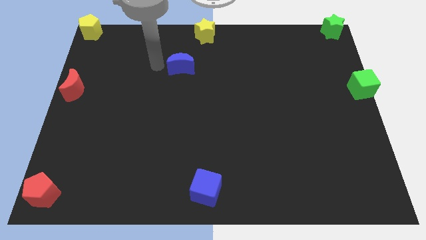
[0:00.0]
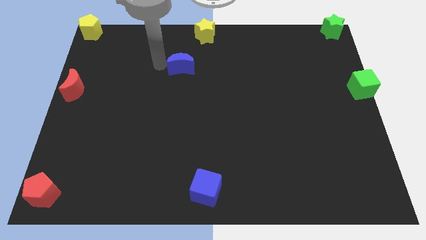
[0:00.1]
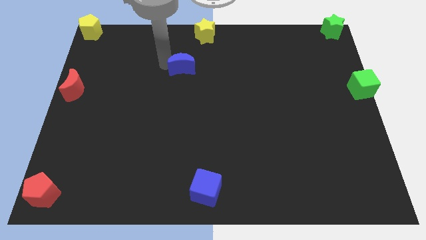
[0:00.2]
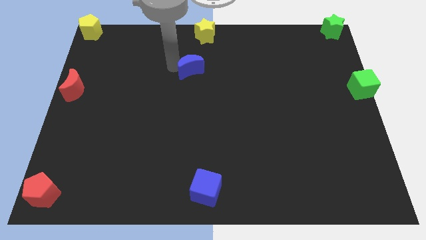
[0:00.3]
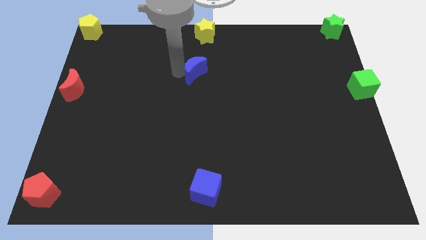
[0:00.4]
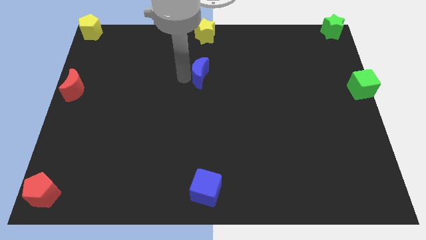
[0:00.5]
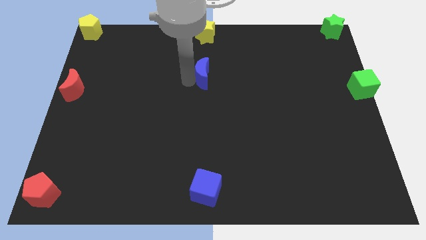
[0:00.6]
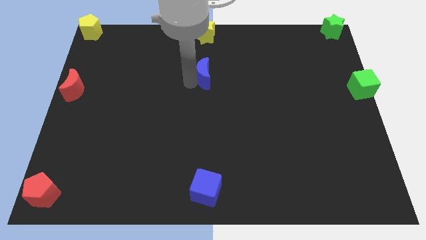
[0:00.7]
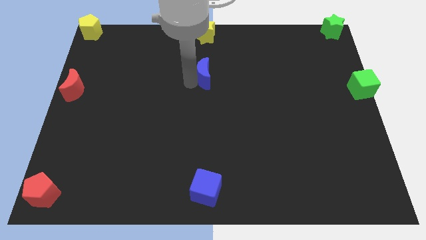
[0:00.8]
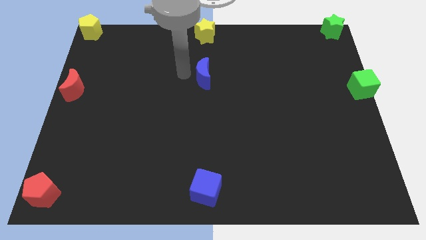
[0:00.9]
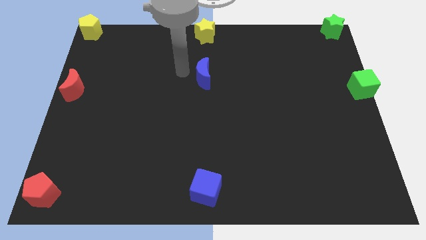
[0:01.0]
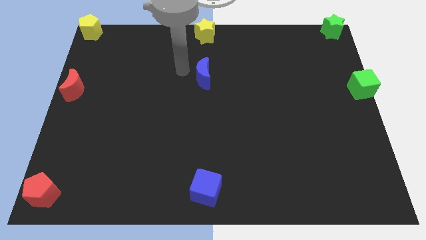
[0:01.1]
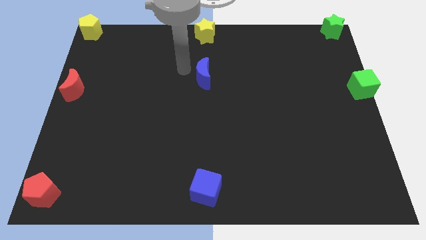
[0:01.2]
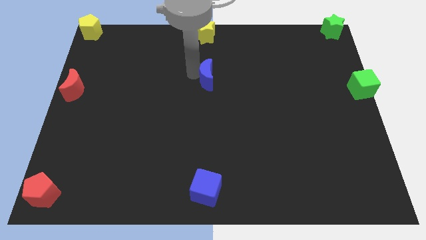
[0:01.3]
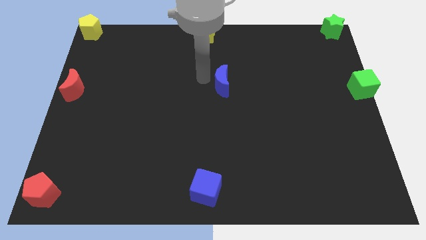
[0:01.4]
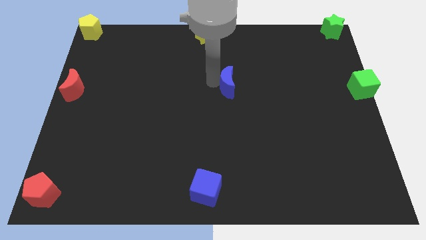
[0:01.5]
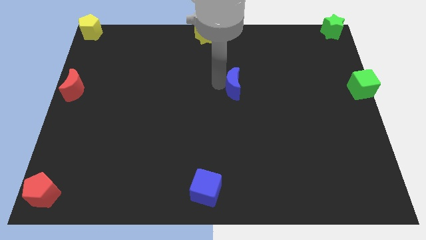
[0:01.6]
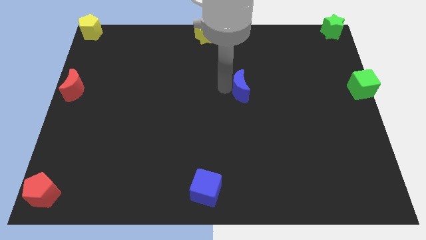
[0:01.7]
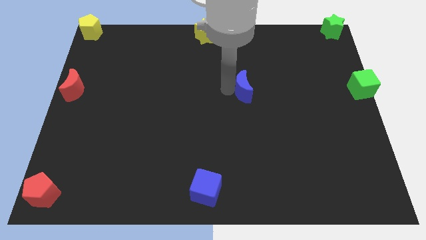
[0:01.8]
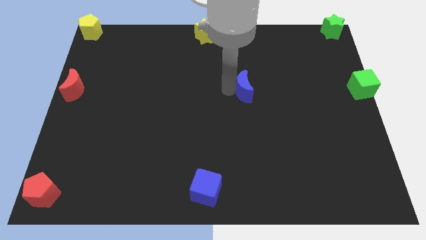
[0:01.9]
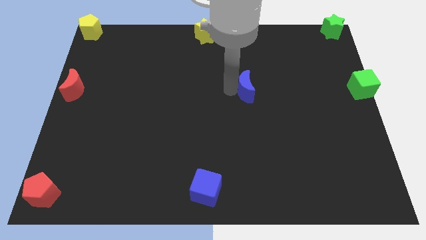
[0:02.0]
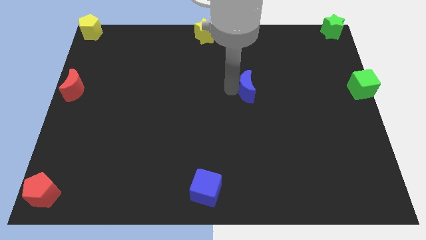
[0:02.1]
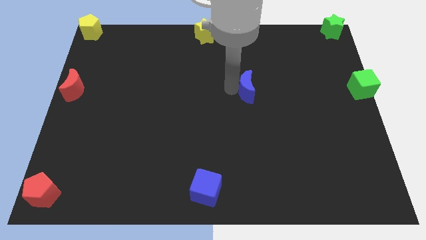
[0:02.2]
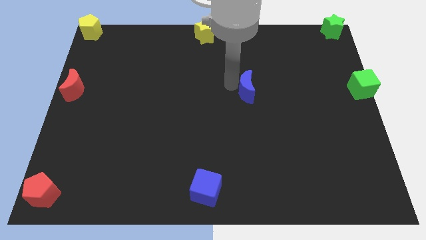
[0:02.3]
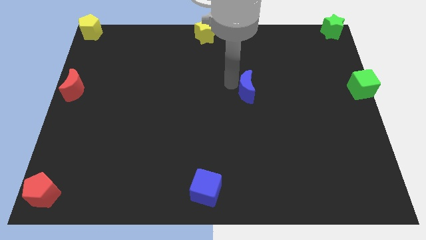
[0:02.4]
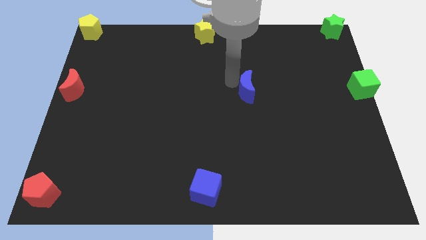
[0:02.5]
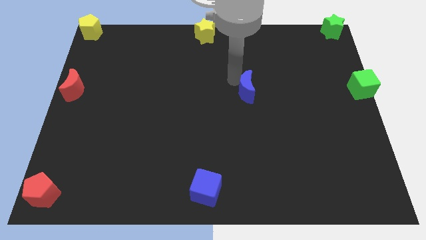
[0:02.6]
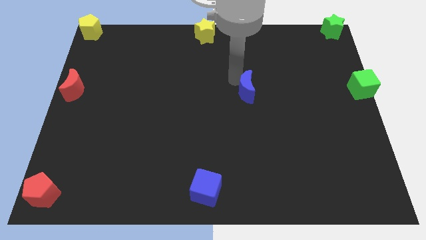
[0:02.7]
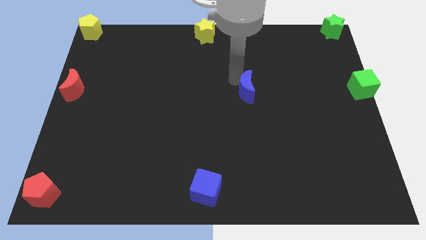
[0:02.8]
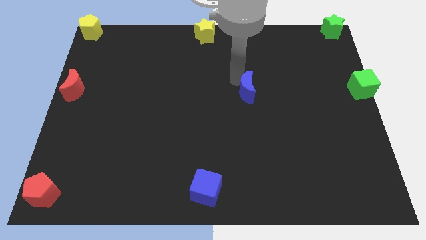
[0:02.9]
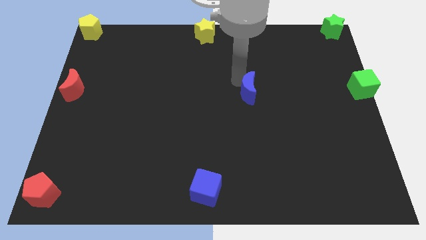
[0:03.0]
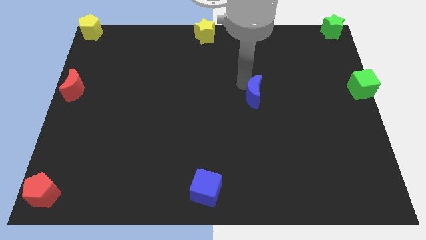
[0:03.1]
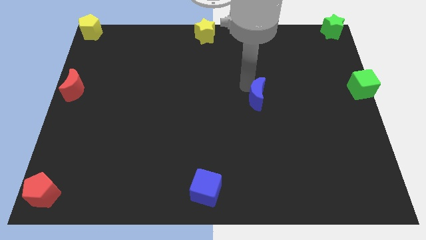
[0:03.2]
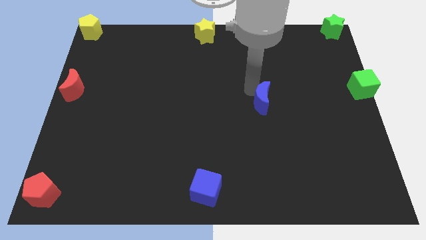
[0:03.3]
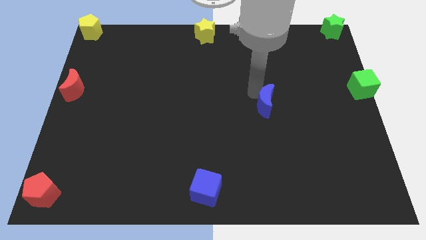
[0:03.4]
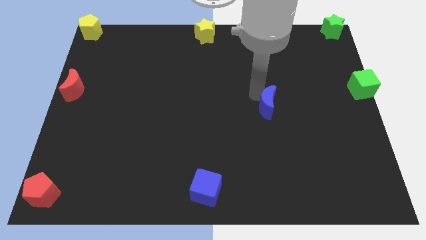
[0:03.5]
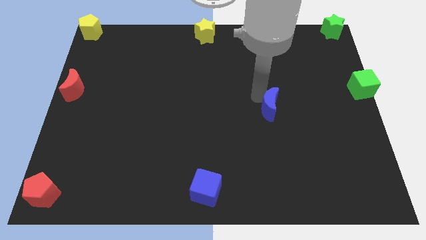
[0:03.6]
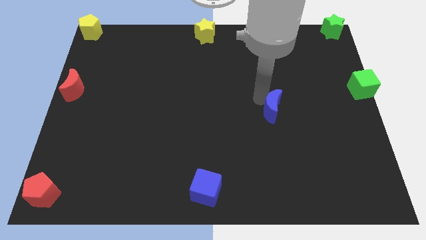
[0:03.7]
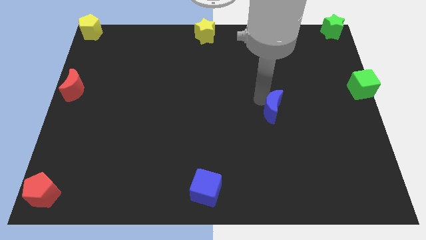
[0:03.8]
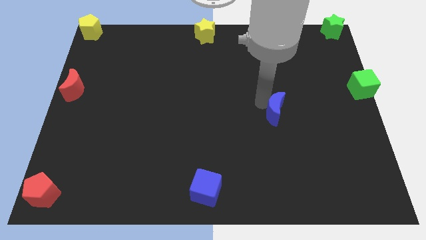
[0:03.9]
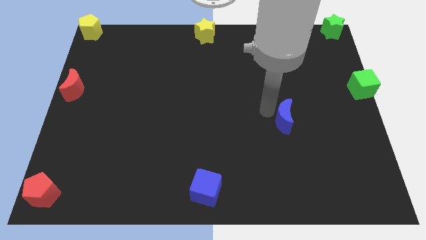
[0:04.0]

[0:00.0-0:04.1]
move blue crescent in between the cubes diagonally

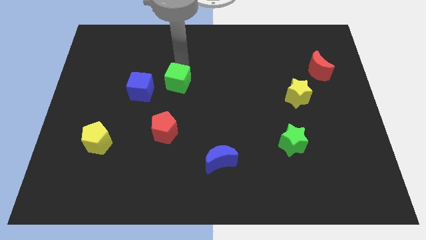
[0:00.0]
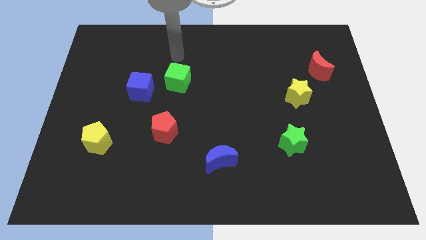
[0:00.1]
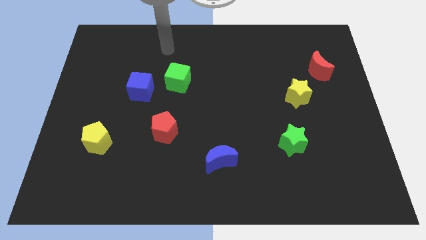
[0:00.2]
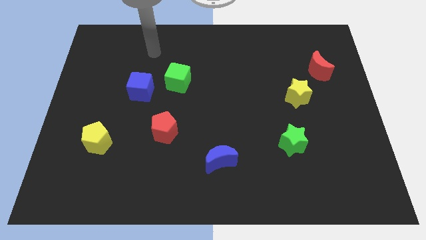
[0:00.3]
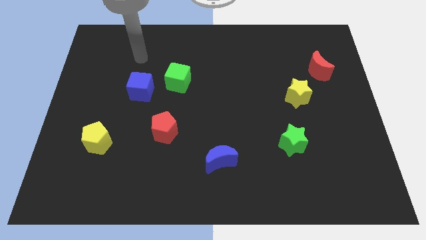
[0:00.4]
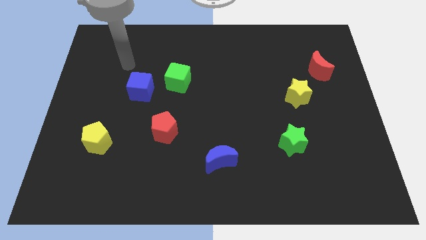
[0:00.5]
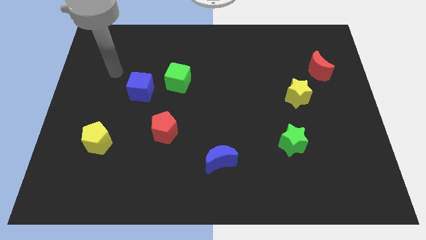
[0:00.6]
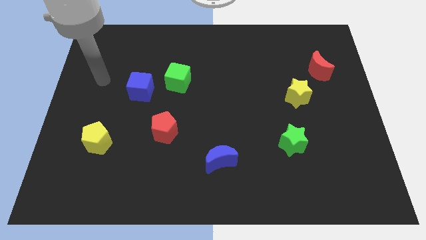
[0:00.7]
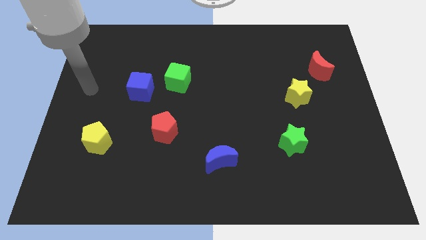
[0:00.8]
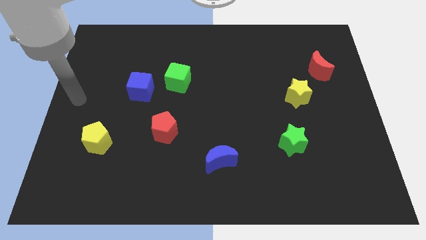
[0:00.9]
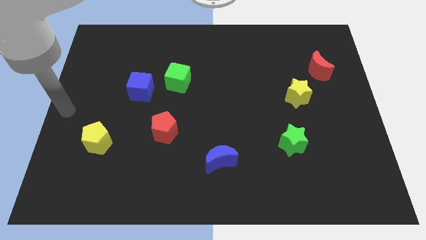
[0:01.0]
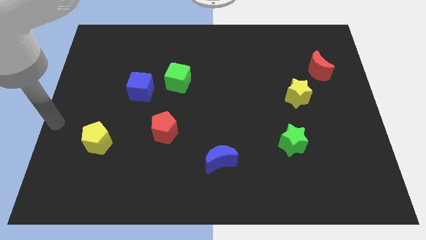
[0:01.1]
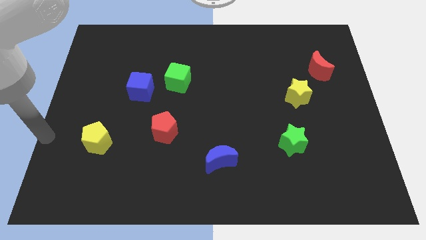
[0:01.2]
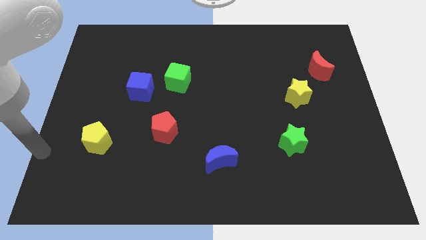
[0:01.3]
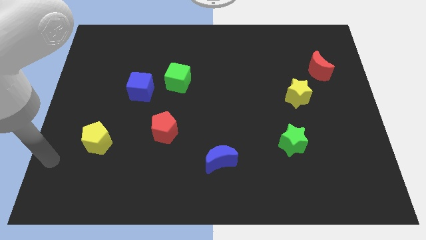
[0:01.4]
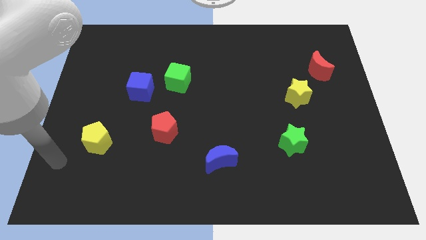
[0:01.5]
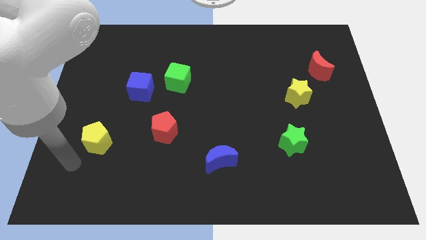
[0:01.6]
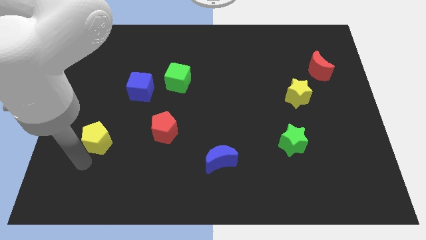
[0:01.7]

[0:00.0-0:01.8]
move the arm towards the bottom side of the yellow pentagon

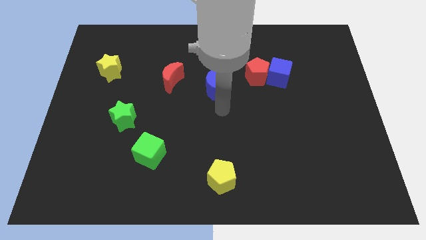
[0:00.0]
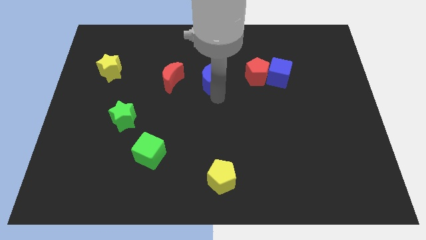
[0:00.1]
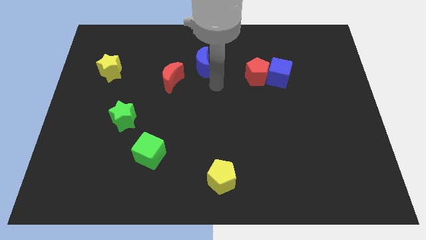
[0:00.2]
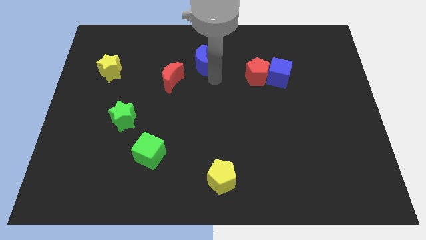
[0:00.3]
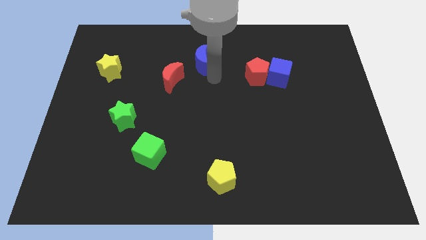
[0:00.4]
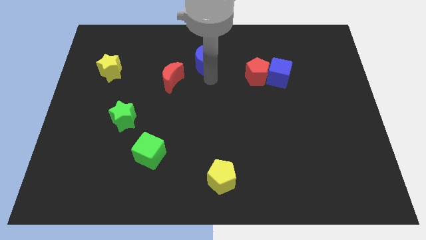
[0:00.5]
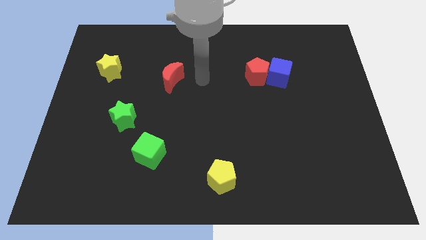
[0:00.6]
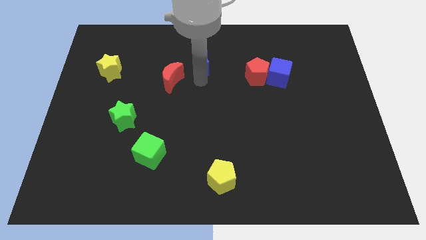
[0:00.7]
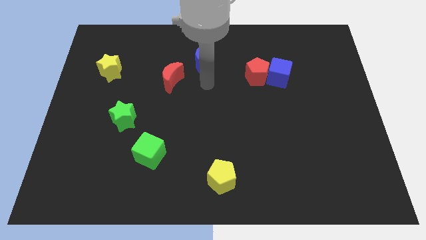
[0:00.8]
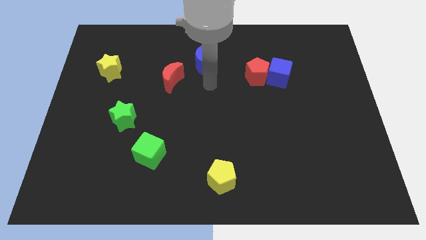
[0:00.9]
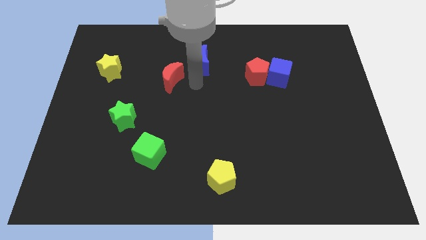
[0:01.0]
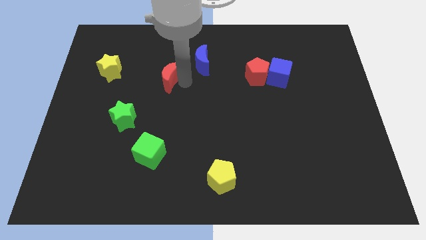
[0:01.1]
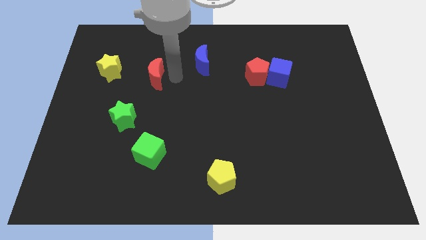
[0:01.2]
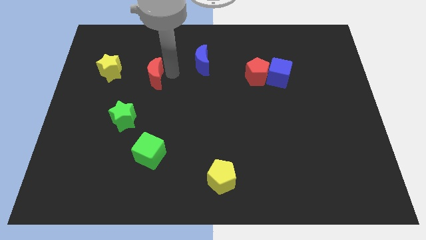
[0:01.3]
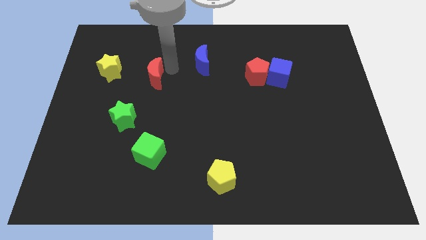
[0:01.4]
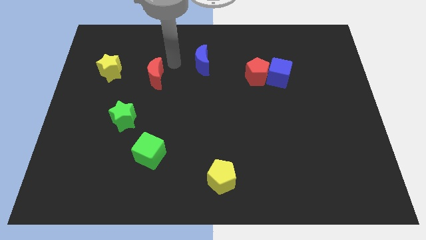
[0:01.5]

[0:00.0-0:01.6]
move the blue crescent towards the top center

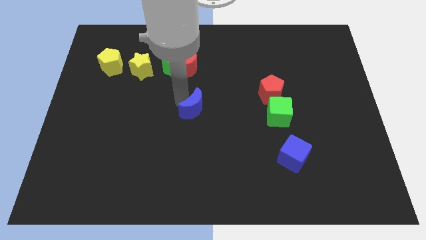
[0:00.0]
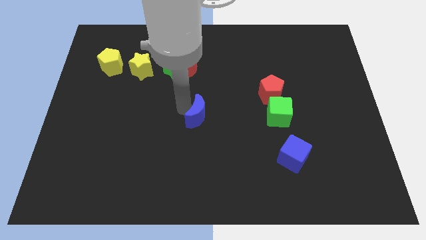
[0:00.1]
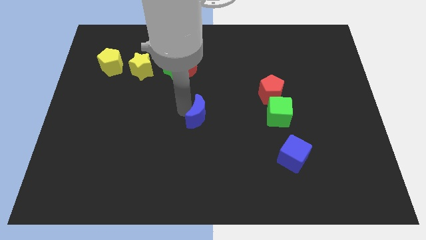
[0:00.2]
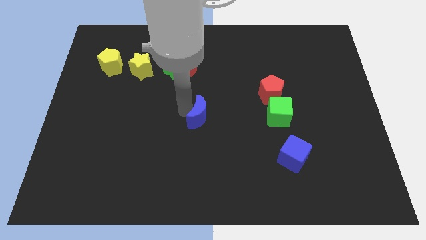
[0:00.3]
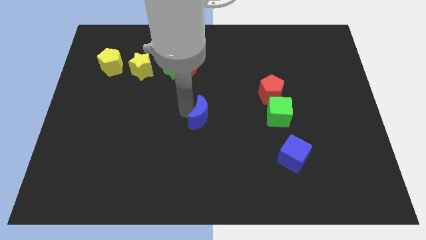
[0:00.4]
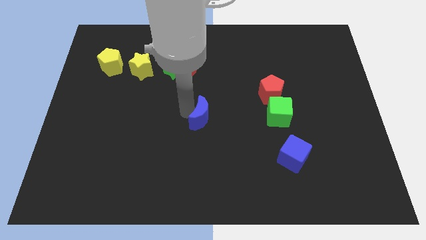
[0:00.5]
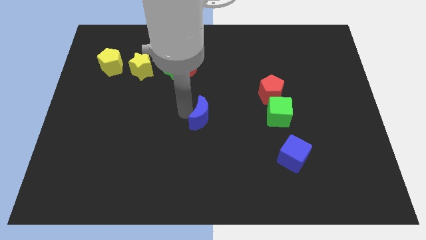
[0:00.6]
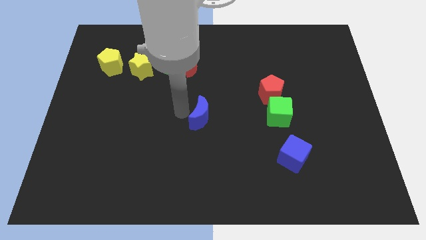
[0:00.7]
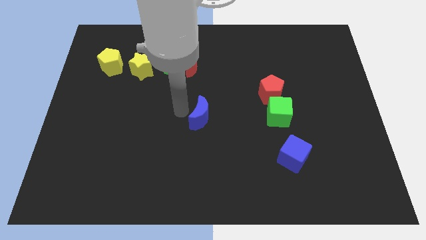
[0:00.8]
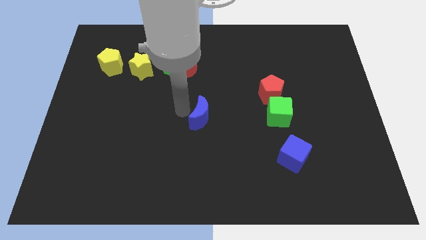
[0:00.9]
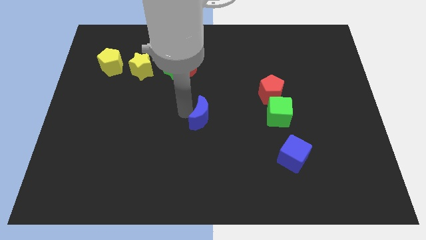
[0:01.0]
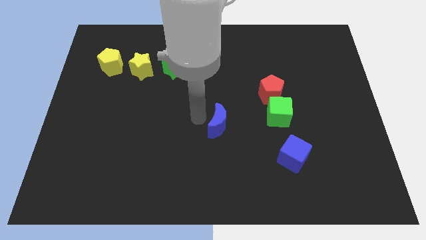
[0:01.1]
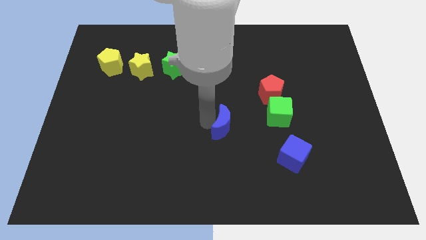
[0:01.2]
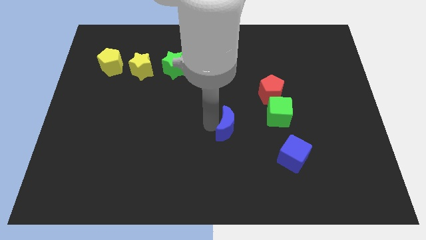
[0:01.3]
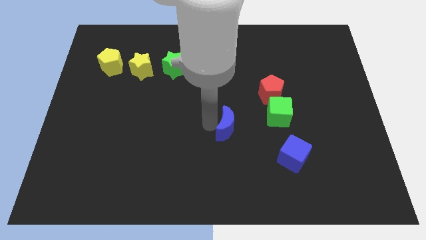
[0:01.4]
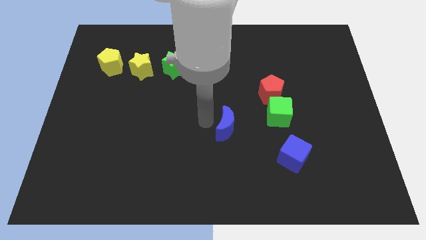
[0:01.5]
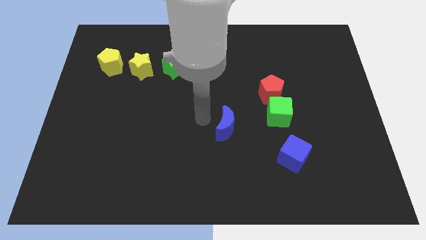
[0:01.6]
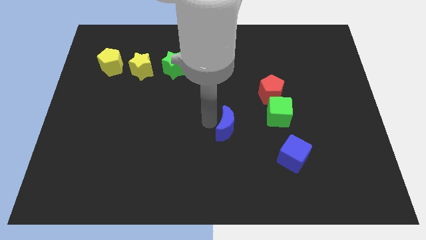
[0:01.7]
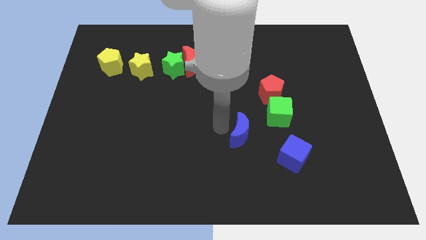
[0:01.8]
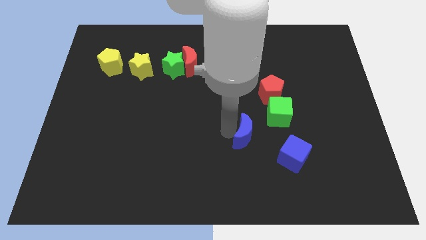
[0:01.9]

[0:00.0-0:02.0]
place the blue moon near to the blue cube
